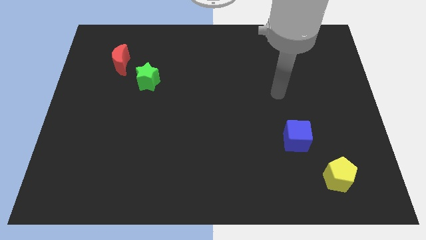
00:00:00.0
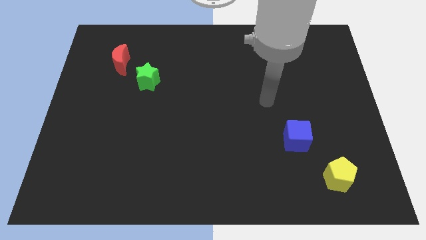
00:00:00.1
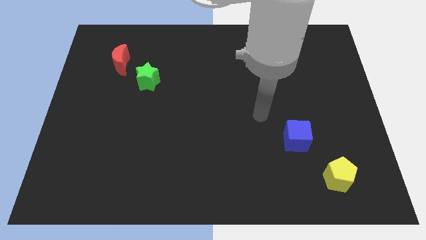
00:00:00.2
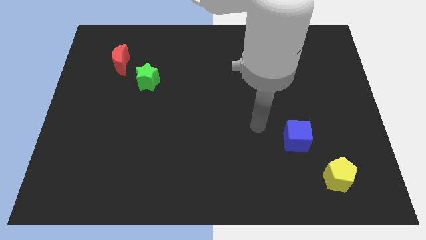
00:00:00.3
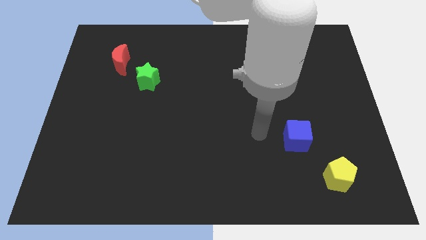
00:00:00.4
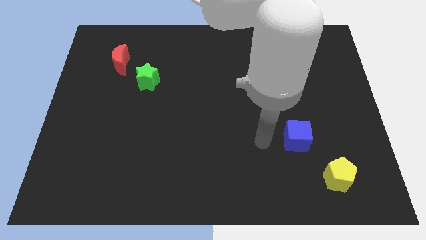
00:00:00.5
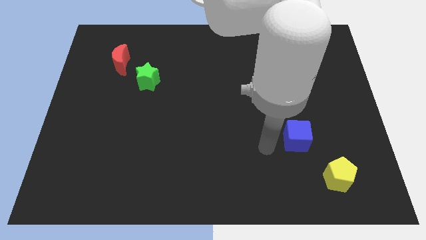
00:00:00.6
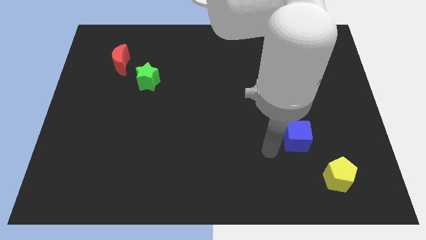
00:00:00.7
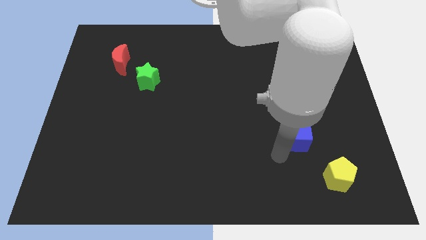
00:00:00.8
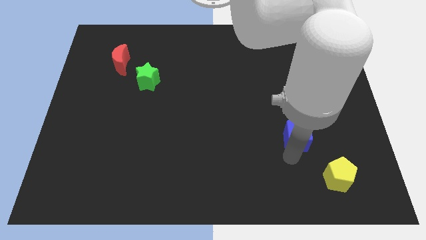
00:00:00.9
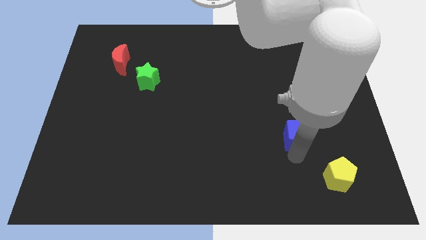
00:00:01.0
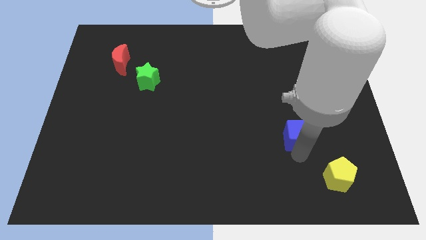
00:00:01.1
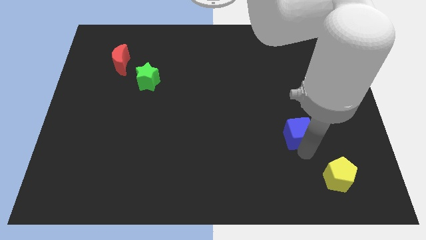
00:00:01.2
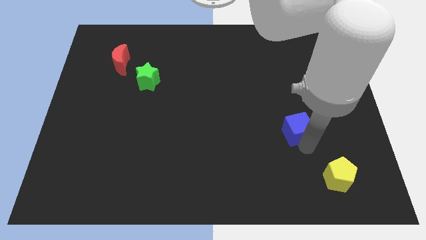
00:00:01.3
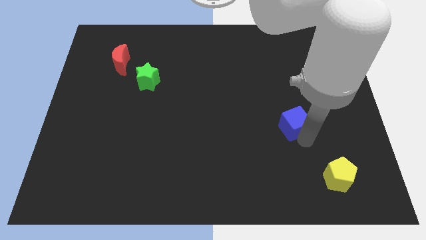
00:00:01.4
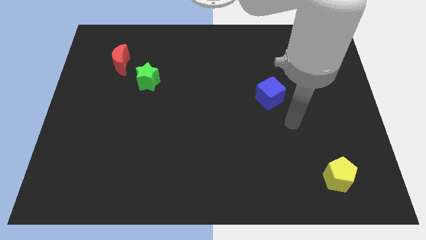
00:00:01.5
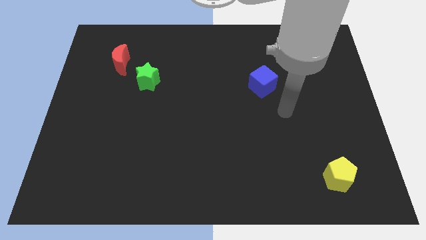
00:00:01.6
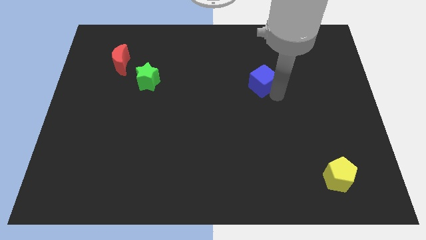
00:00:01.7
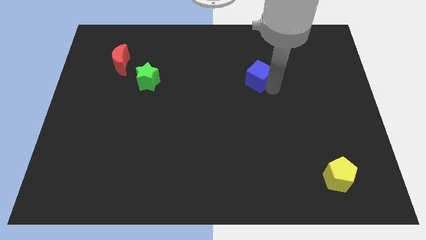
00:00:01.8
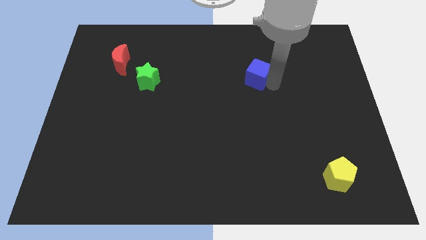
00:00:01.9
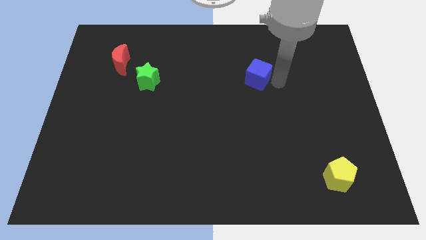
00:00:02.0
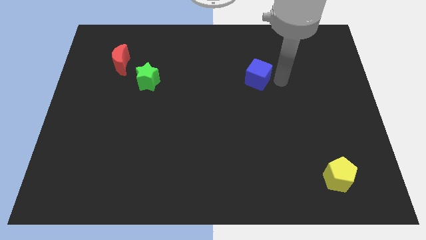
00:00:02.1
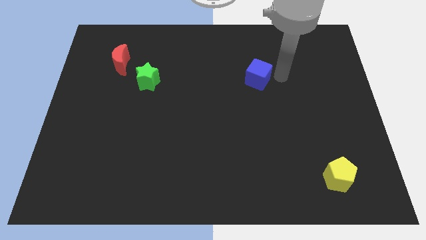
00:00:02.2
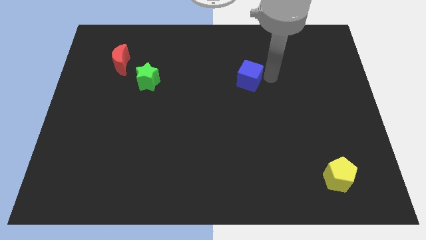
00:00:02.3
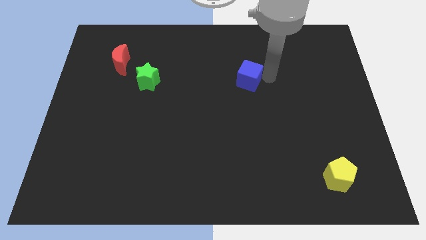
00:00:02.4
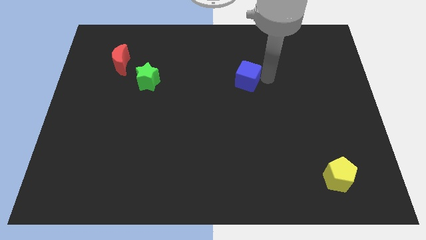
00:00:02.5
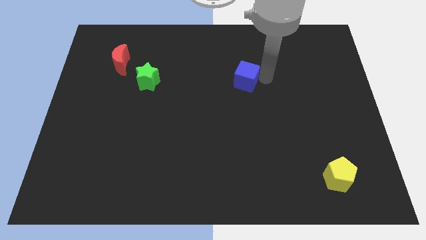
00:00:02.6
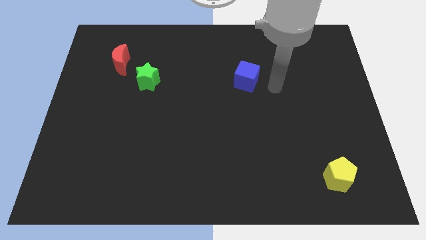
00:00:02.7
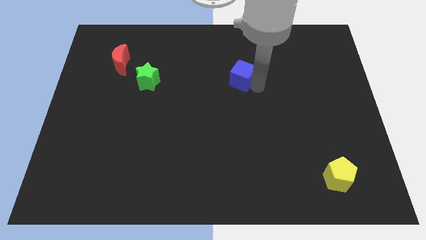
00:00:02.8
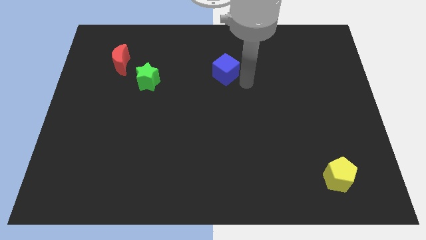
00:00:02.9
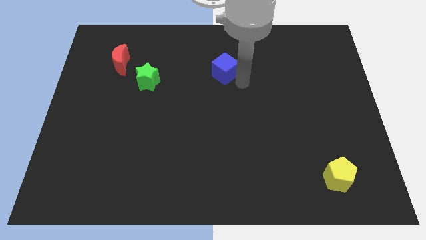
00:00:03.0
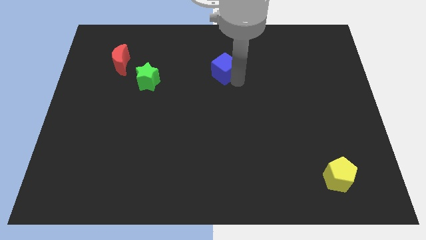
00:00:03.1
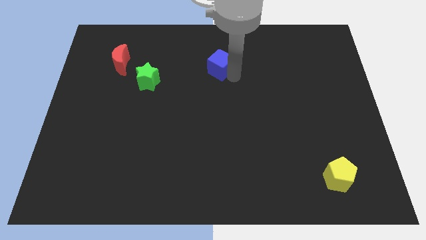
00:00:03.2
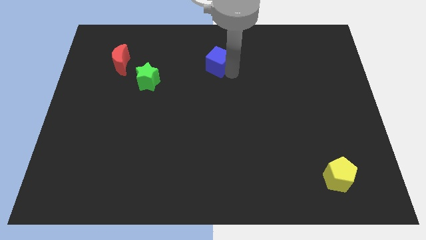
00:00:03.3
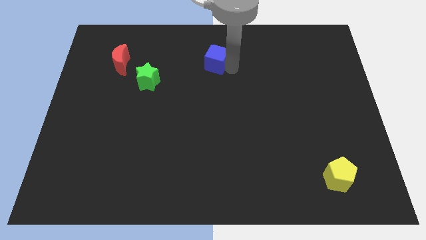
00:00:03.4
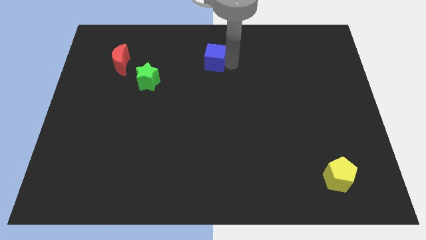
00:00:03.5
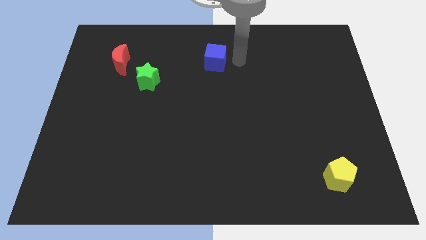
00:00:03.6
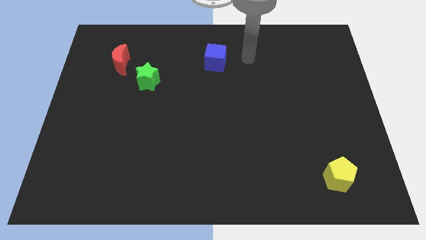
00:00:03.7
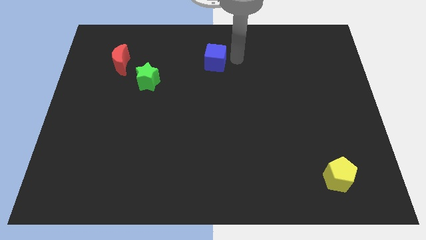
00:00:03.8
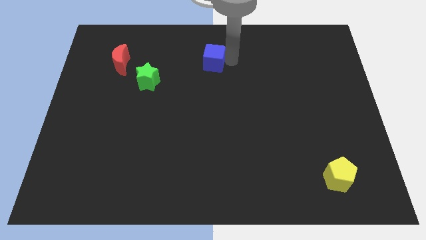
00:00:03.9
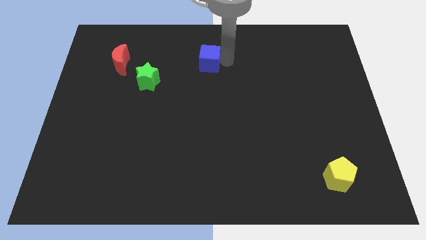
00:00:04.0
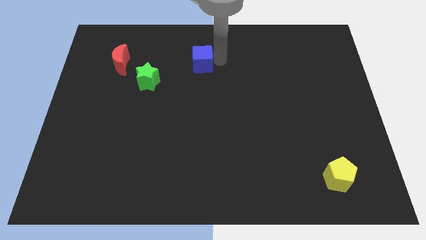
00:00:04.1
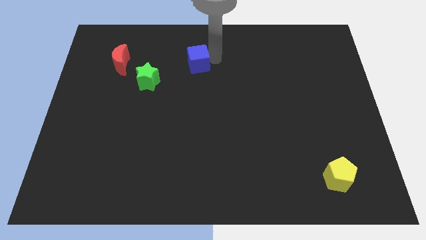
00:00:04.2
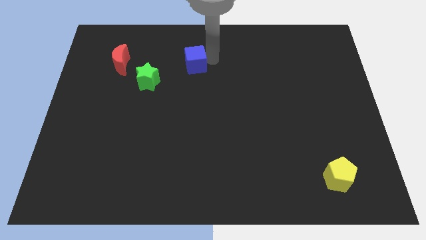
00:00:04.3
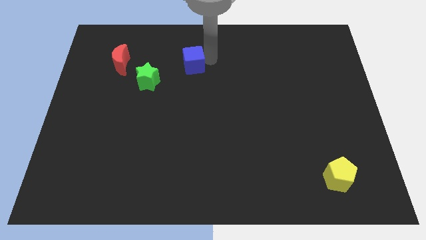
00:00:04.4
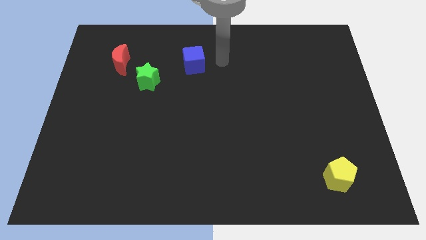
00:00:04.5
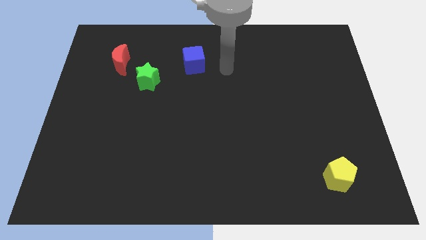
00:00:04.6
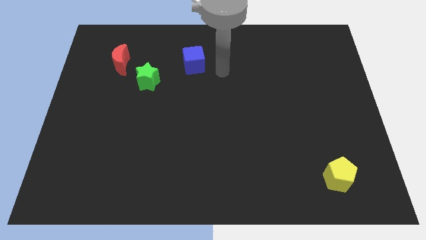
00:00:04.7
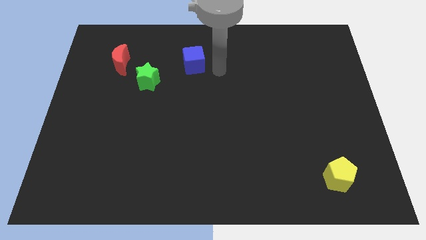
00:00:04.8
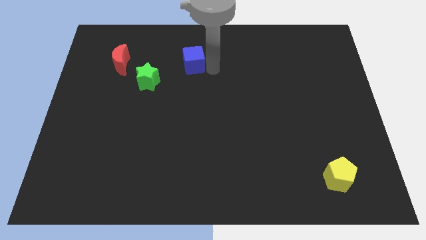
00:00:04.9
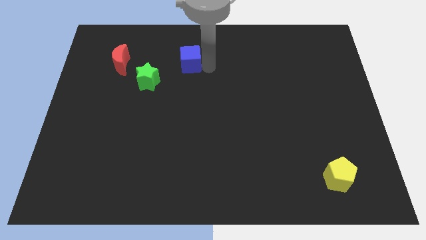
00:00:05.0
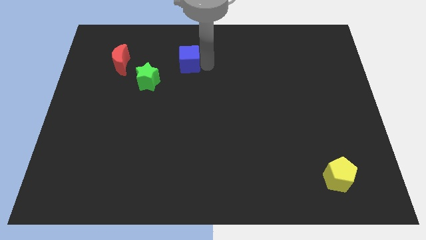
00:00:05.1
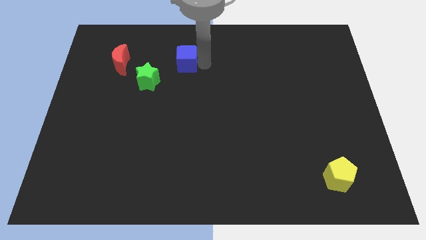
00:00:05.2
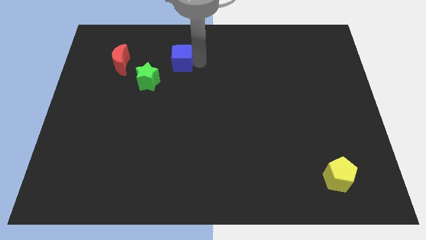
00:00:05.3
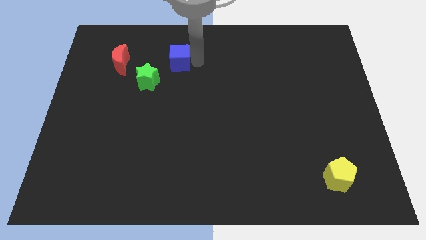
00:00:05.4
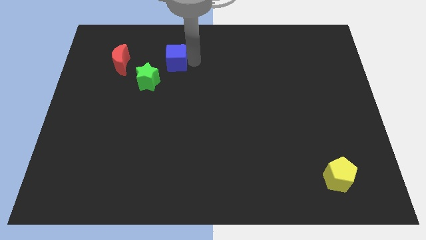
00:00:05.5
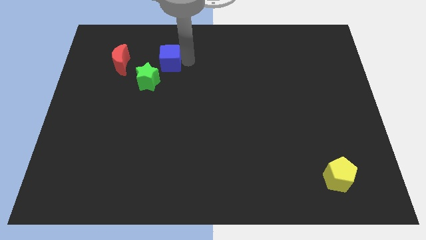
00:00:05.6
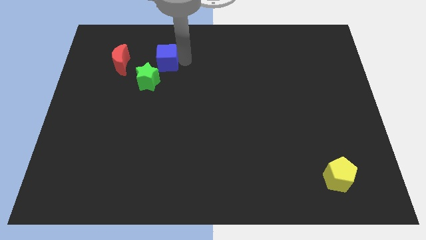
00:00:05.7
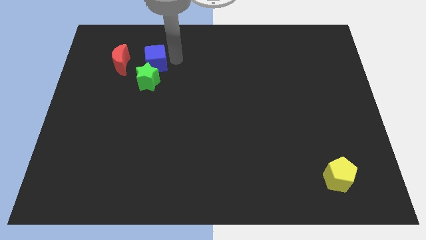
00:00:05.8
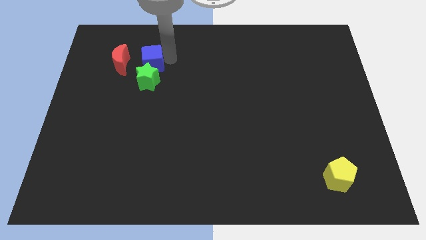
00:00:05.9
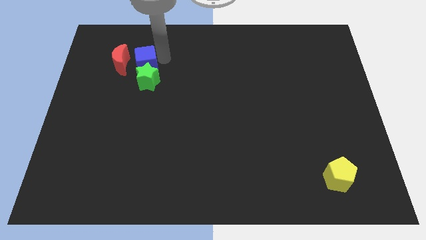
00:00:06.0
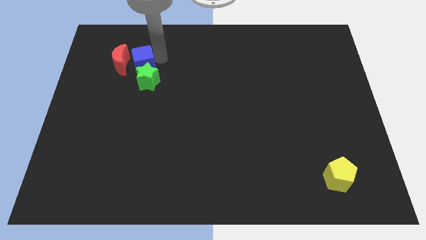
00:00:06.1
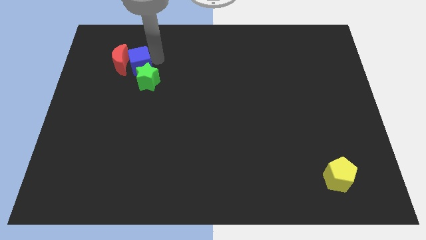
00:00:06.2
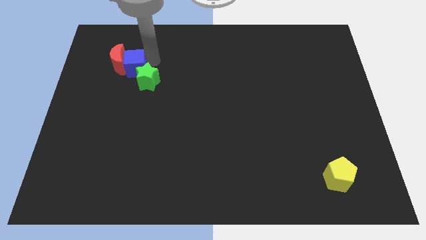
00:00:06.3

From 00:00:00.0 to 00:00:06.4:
put the blue cube close to the red block

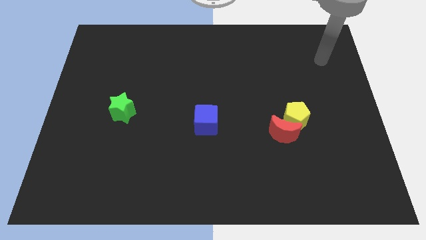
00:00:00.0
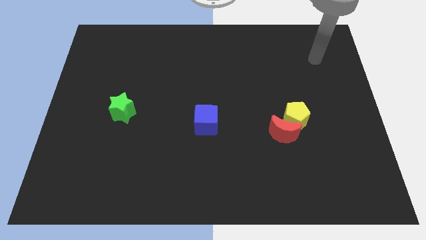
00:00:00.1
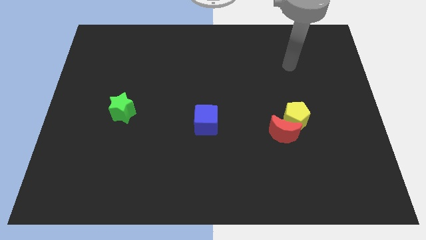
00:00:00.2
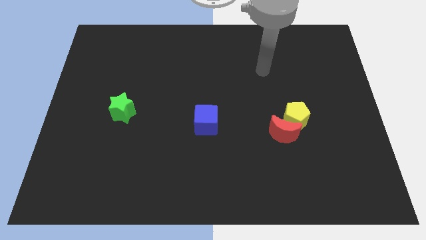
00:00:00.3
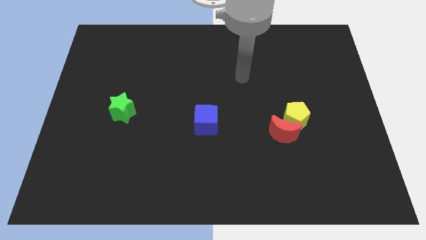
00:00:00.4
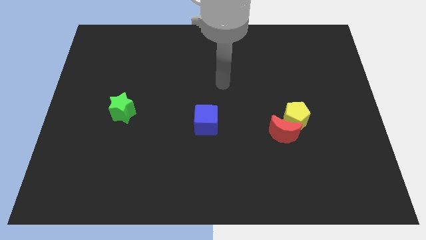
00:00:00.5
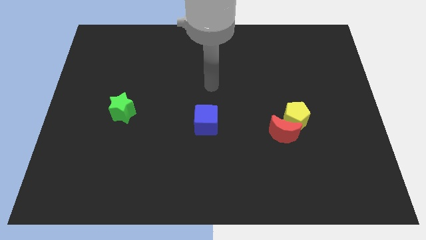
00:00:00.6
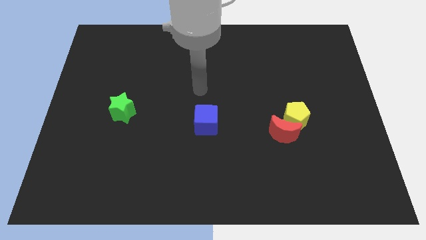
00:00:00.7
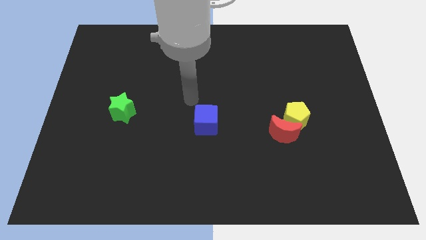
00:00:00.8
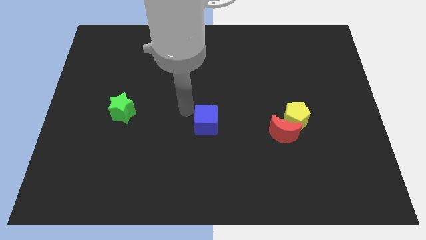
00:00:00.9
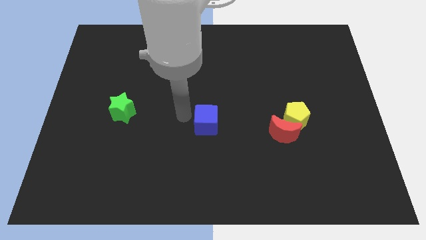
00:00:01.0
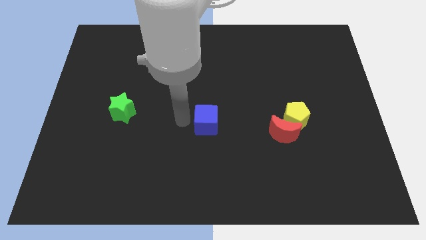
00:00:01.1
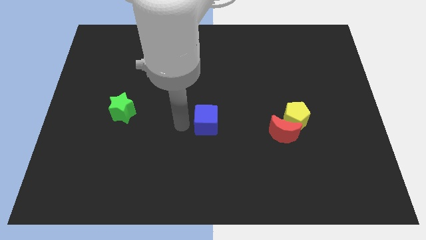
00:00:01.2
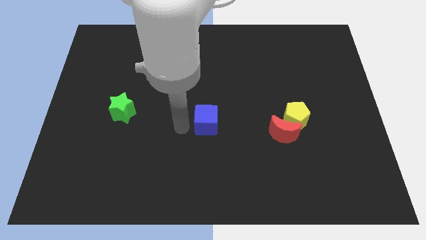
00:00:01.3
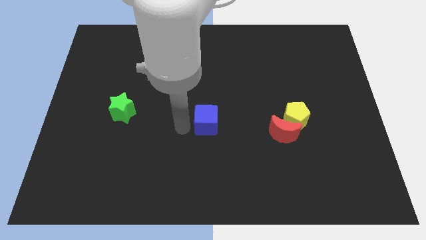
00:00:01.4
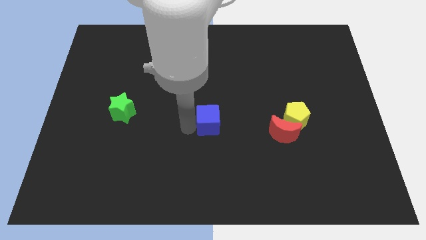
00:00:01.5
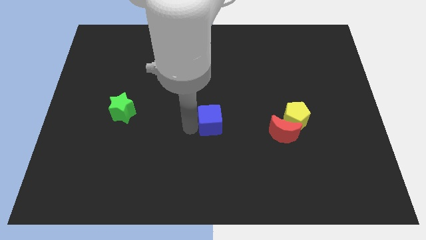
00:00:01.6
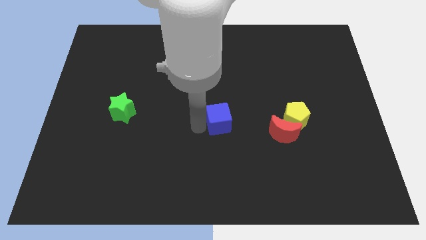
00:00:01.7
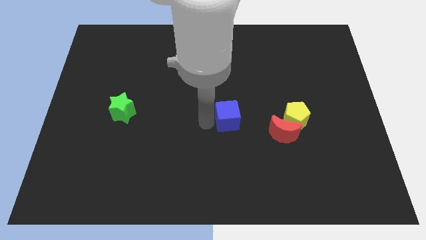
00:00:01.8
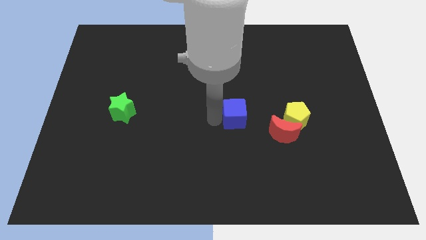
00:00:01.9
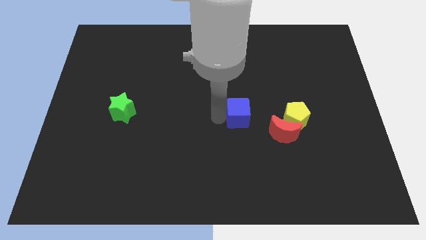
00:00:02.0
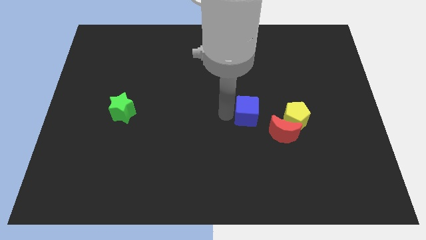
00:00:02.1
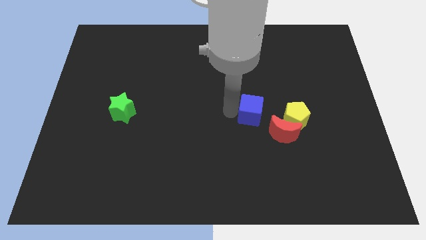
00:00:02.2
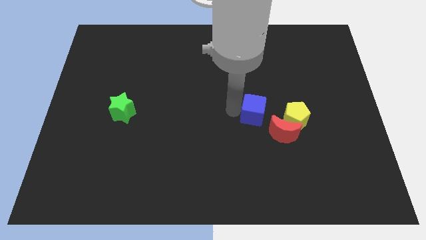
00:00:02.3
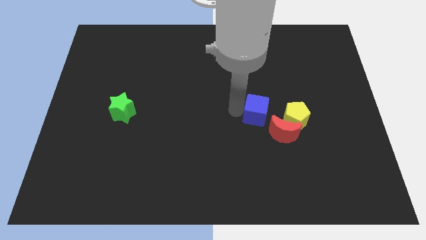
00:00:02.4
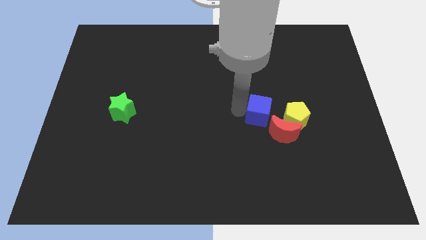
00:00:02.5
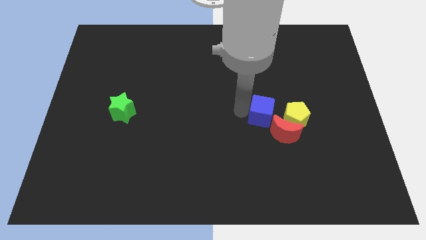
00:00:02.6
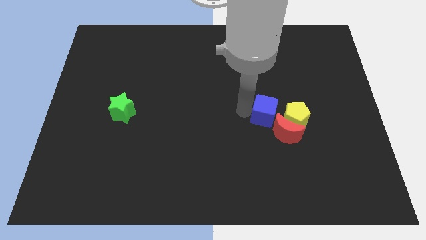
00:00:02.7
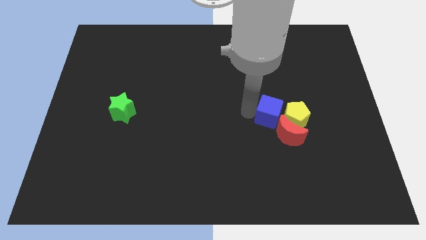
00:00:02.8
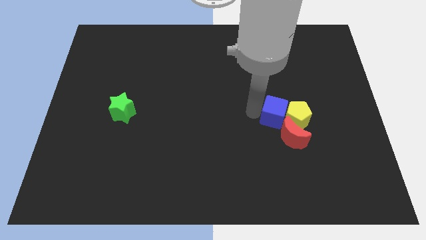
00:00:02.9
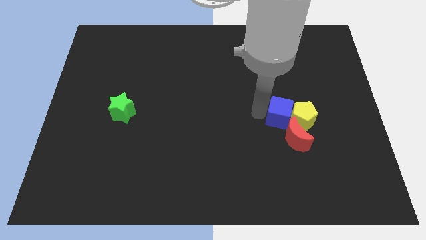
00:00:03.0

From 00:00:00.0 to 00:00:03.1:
put the blue cube next to the pentagon
